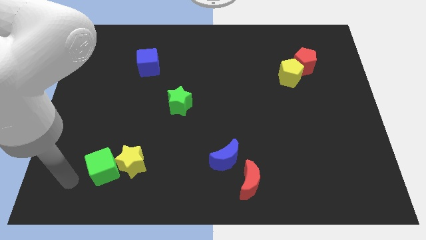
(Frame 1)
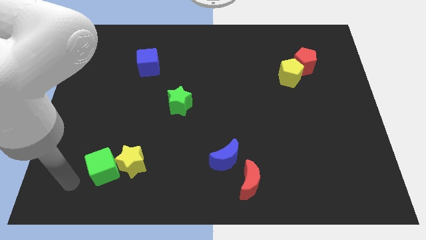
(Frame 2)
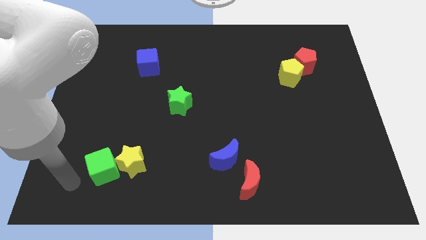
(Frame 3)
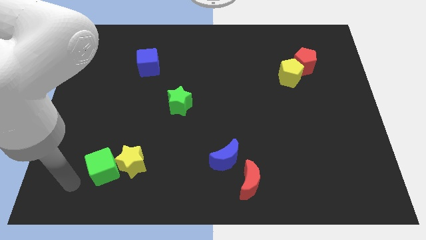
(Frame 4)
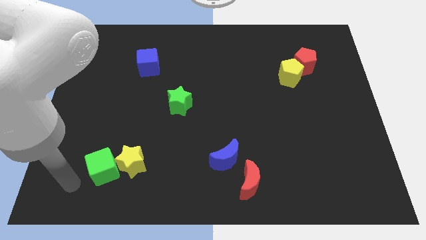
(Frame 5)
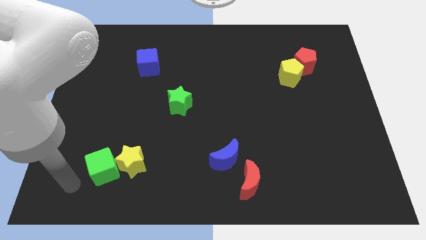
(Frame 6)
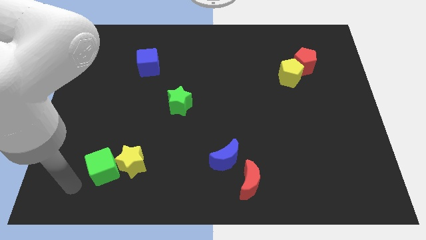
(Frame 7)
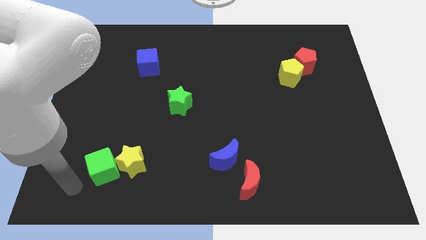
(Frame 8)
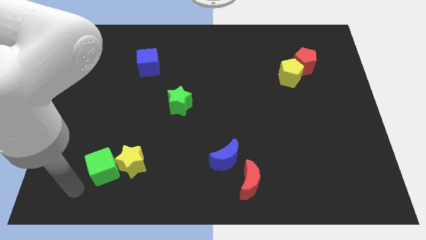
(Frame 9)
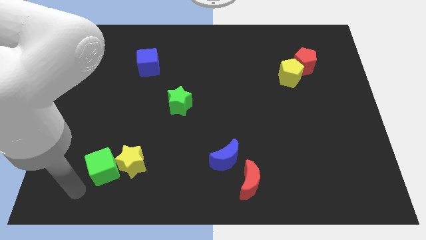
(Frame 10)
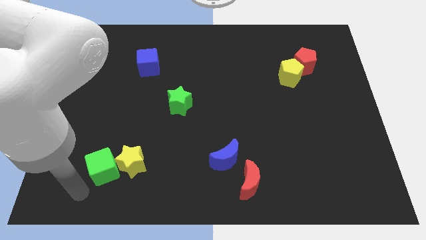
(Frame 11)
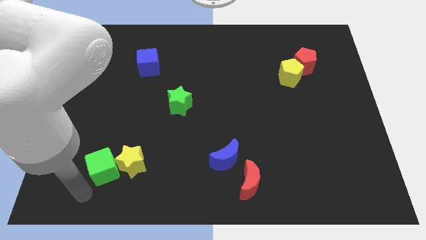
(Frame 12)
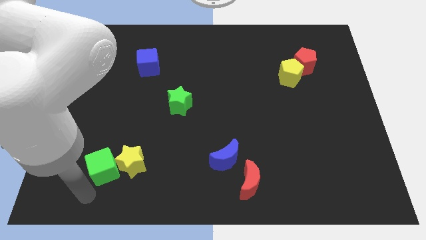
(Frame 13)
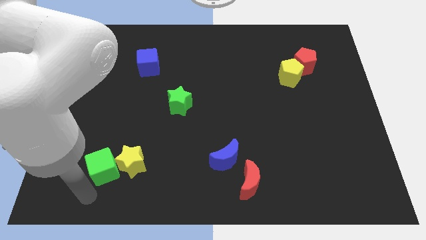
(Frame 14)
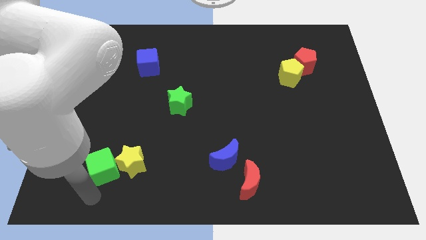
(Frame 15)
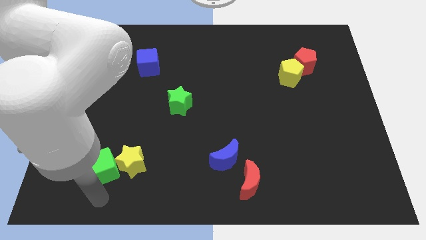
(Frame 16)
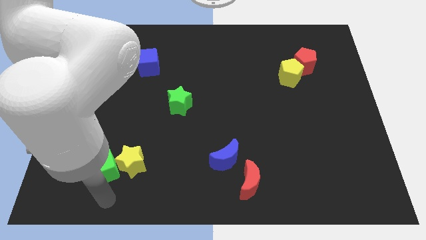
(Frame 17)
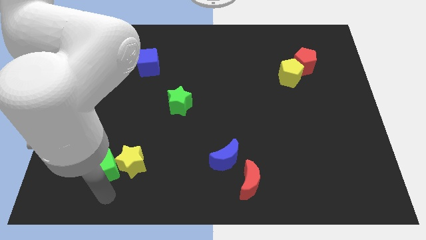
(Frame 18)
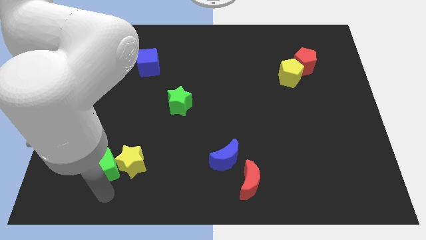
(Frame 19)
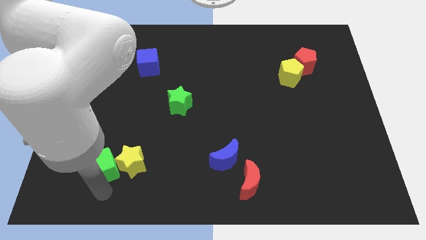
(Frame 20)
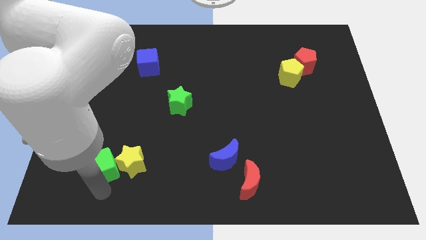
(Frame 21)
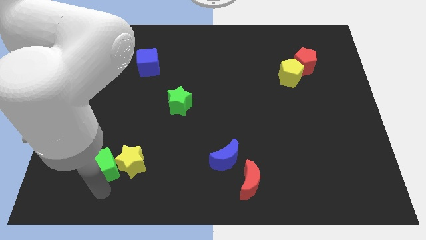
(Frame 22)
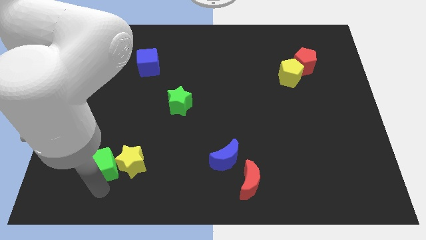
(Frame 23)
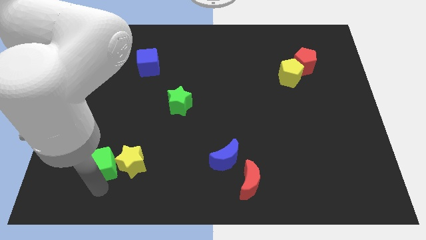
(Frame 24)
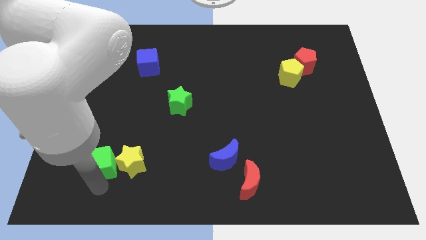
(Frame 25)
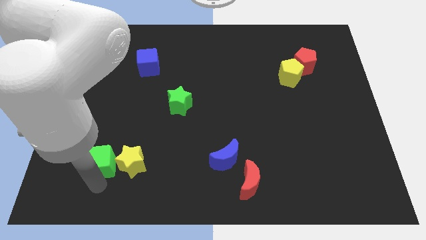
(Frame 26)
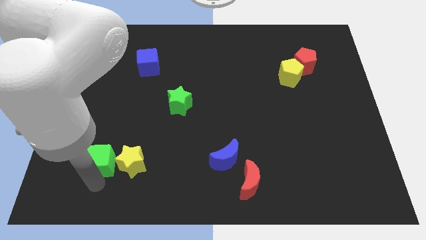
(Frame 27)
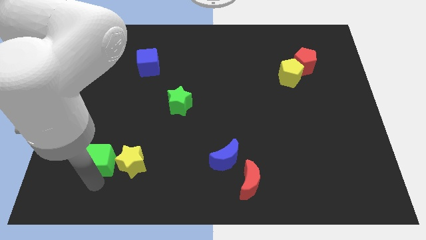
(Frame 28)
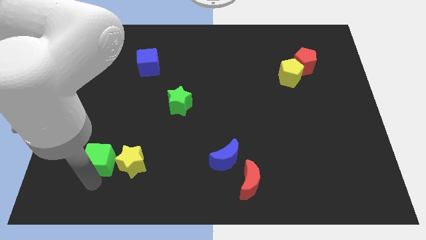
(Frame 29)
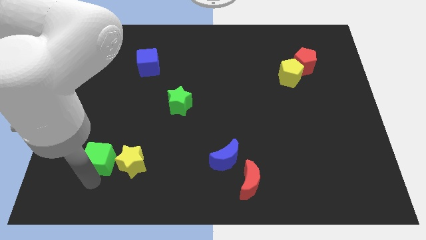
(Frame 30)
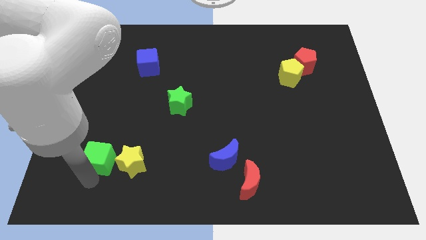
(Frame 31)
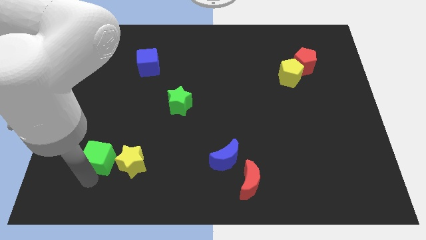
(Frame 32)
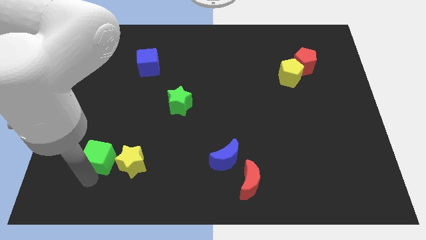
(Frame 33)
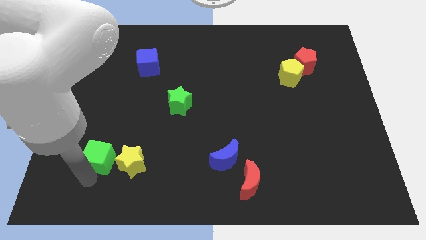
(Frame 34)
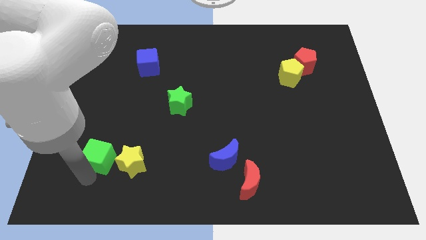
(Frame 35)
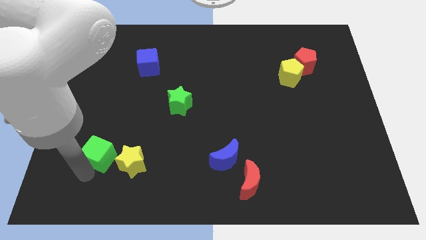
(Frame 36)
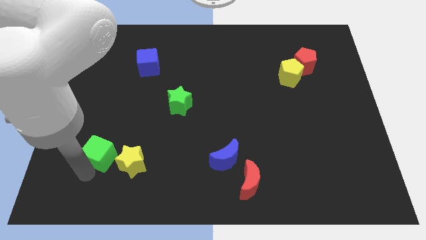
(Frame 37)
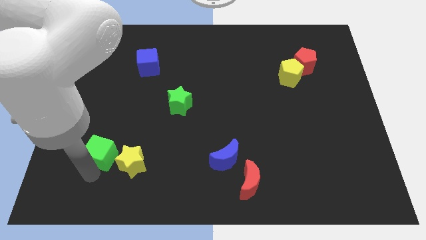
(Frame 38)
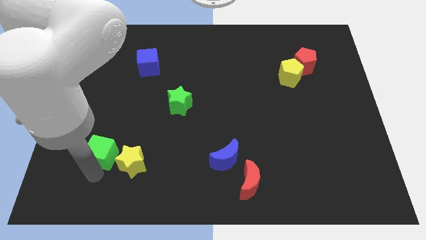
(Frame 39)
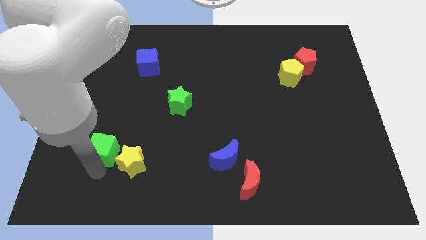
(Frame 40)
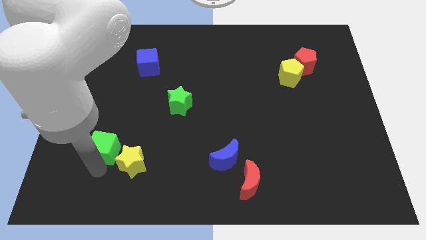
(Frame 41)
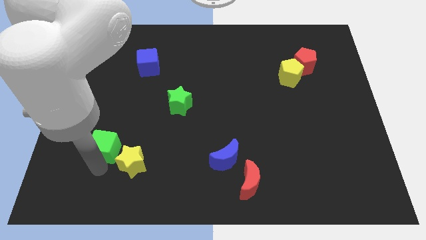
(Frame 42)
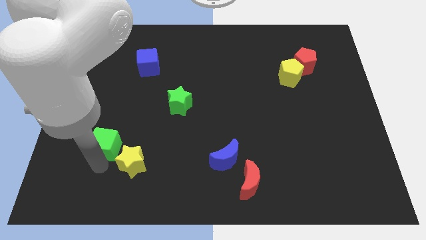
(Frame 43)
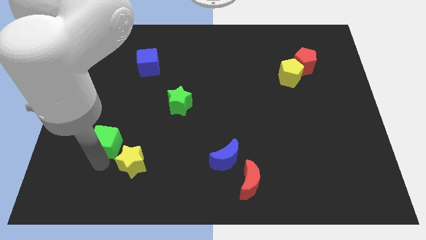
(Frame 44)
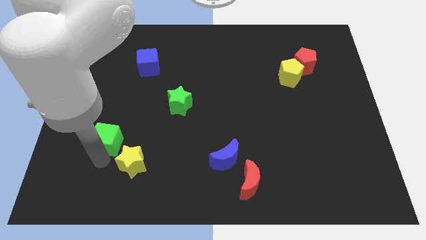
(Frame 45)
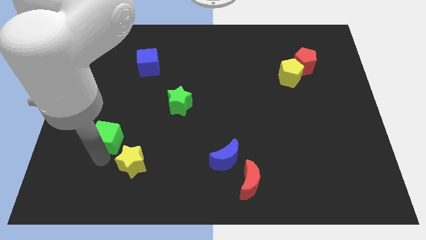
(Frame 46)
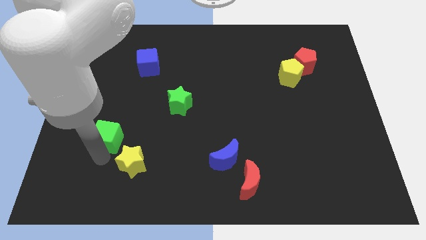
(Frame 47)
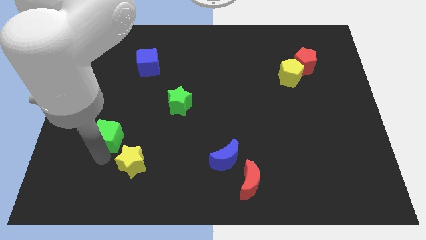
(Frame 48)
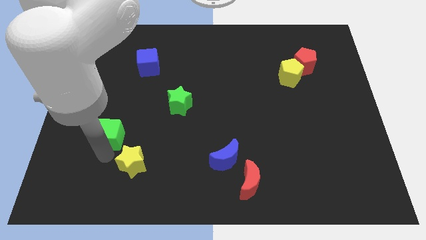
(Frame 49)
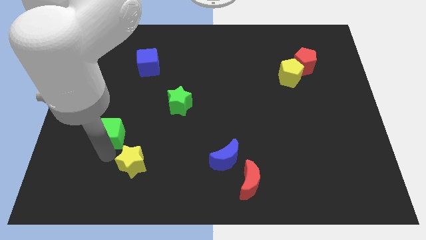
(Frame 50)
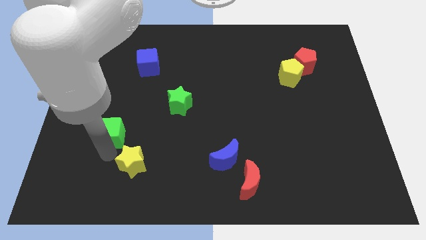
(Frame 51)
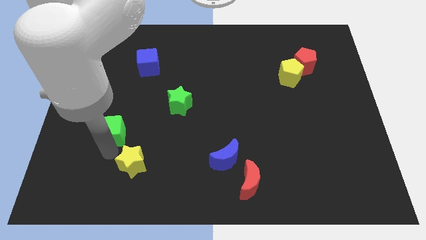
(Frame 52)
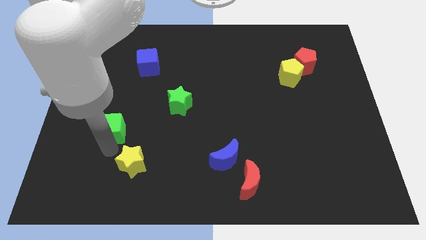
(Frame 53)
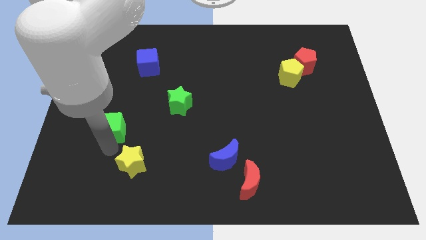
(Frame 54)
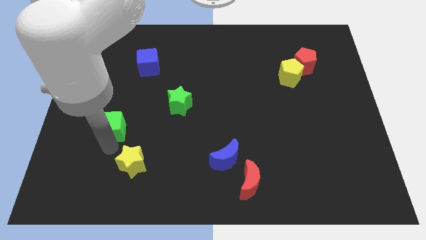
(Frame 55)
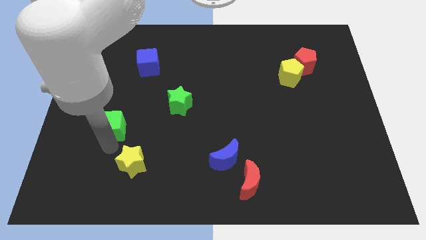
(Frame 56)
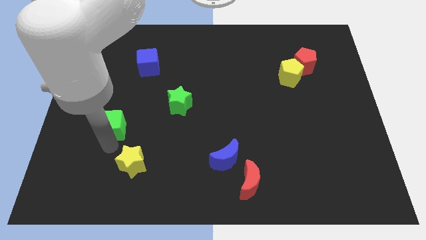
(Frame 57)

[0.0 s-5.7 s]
separate the green cube from the yellow star

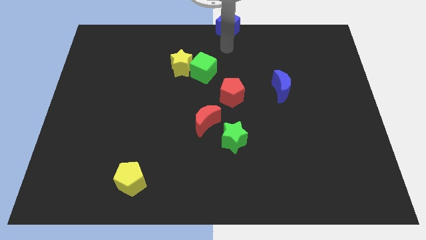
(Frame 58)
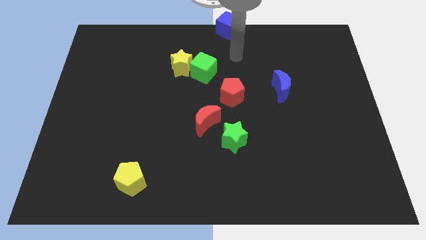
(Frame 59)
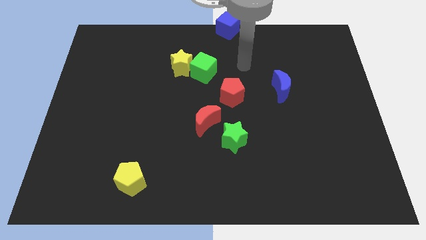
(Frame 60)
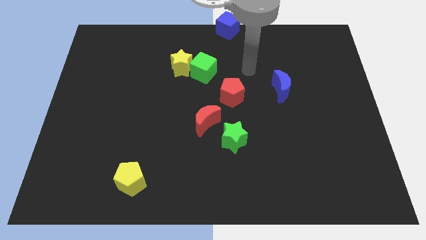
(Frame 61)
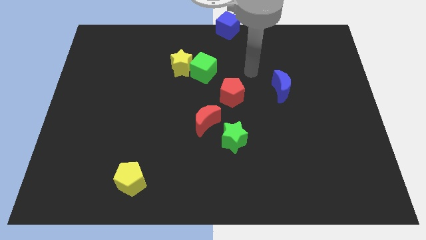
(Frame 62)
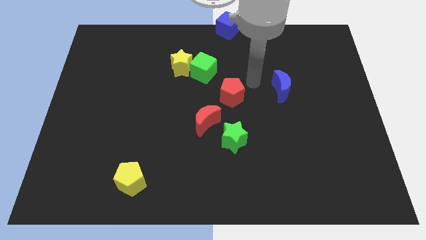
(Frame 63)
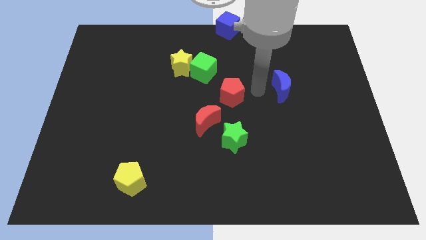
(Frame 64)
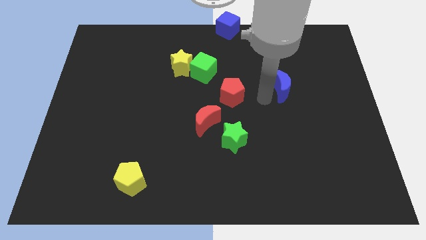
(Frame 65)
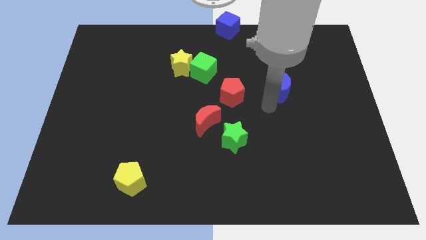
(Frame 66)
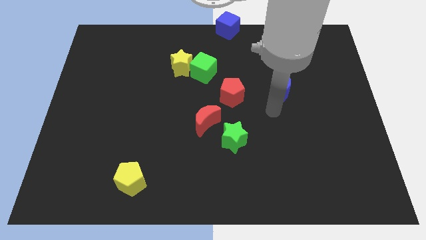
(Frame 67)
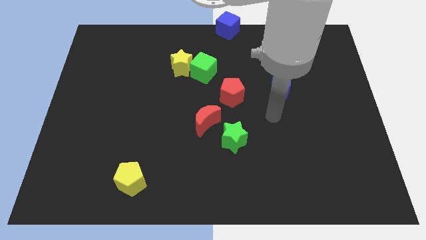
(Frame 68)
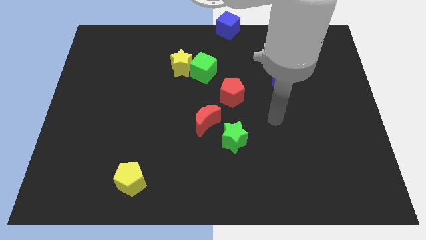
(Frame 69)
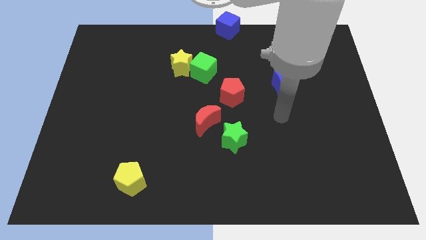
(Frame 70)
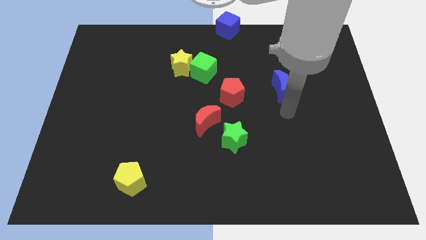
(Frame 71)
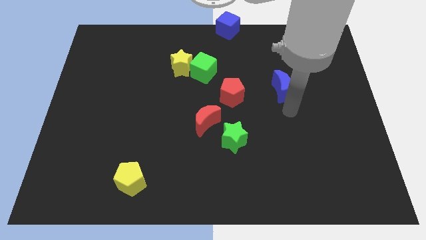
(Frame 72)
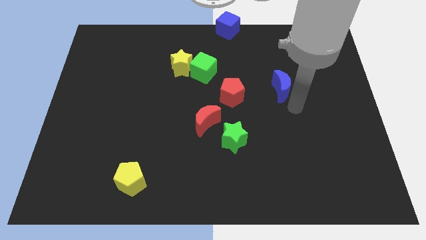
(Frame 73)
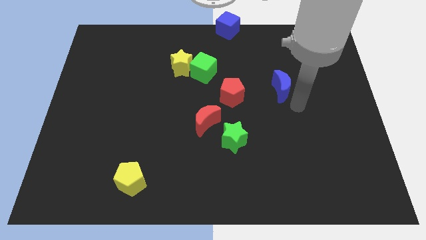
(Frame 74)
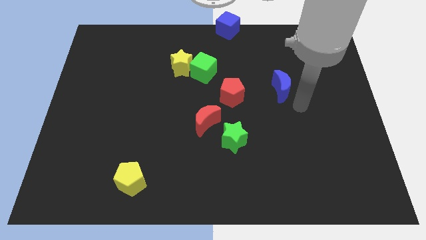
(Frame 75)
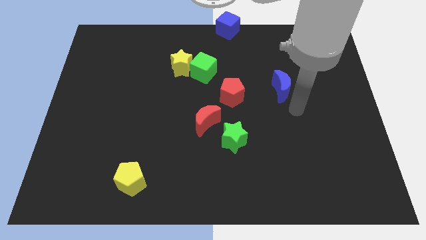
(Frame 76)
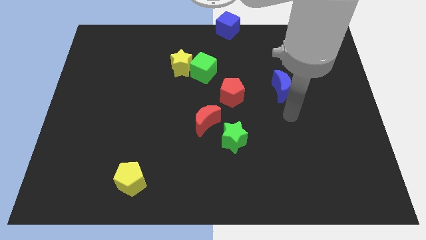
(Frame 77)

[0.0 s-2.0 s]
go away from the blue cube

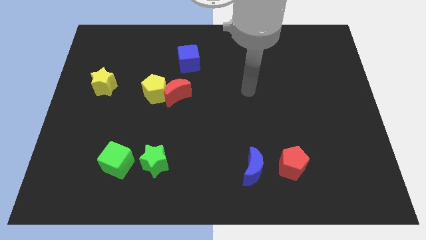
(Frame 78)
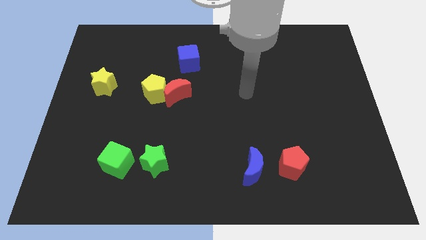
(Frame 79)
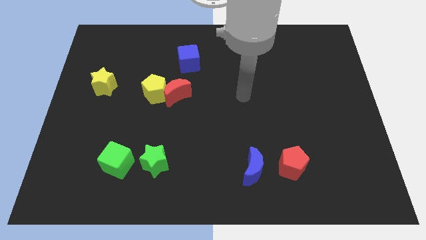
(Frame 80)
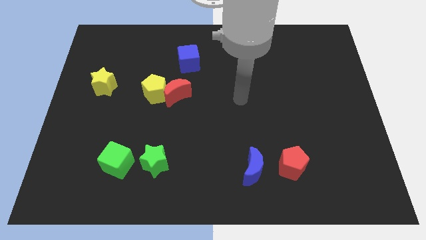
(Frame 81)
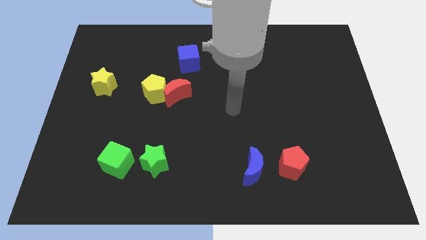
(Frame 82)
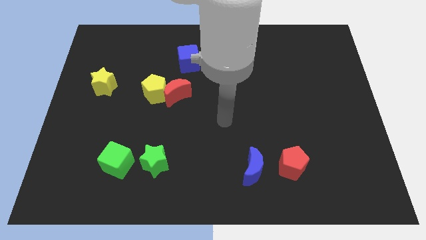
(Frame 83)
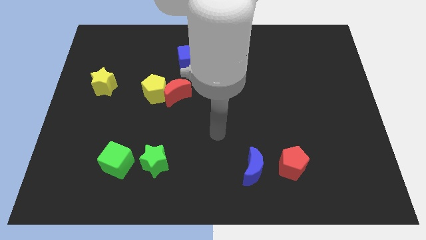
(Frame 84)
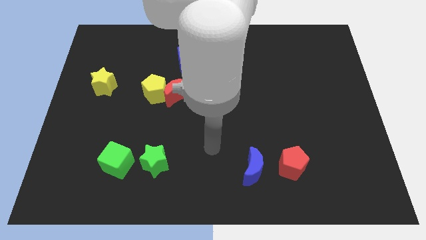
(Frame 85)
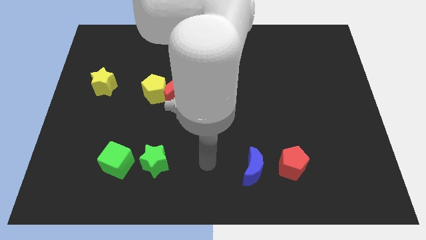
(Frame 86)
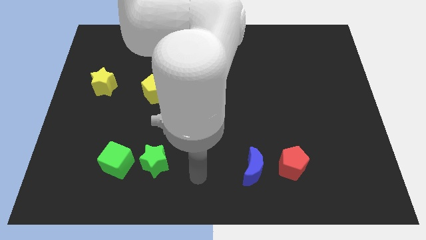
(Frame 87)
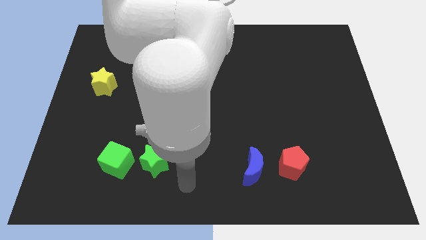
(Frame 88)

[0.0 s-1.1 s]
move your arm to the bottom side of the board

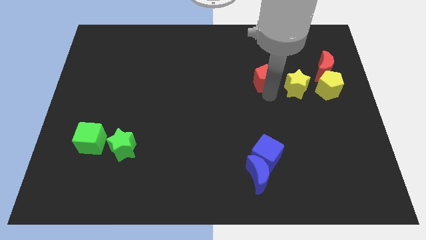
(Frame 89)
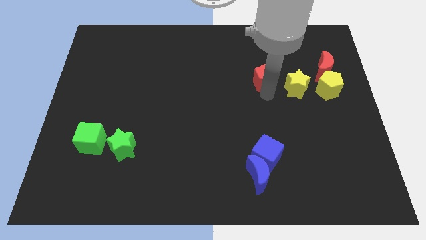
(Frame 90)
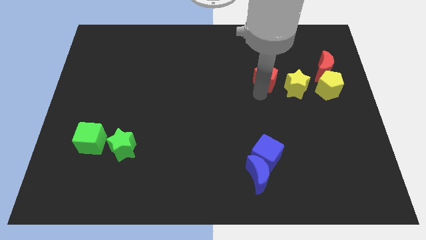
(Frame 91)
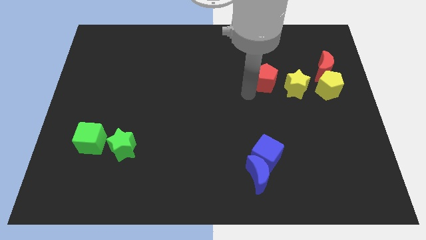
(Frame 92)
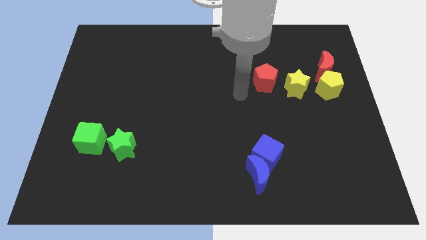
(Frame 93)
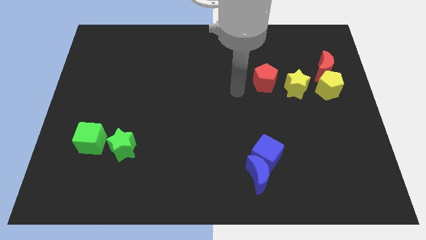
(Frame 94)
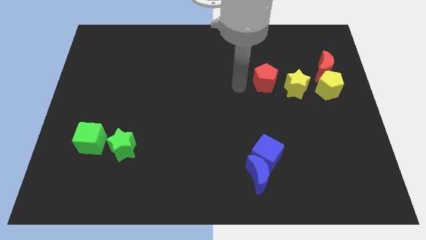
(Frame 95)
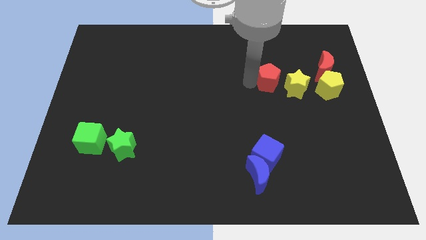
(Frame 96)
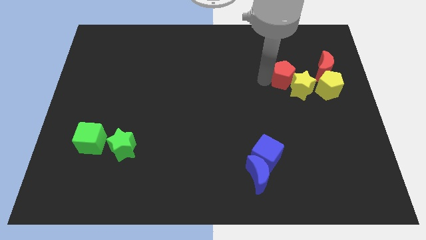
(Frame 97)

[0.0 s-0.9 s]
push the red pentagon into the yellow star
